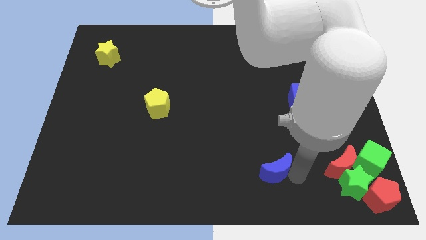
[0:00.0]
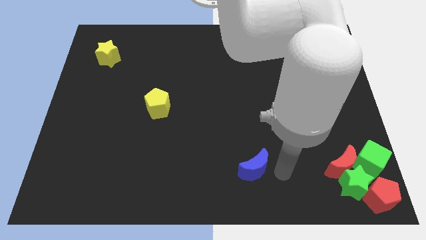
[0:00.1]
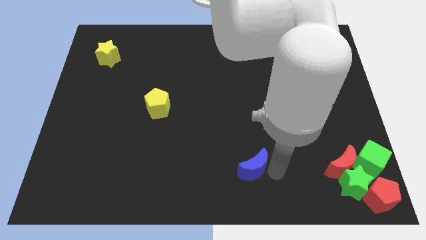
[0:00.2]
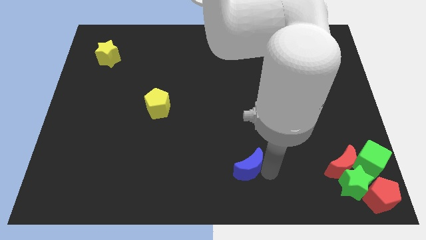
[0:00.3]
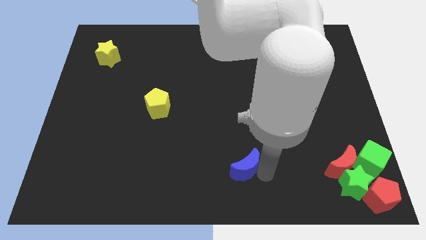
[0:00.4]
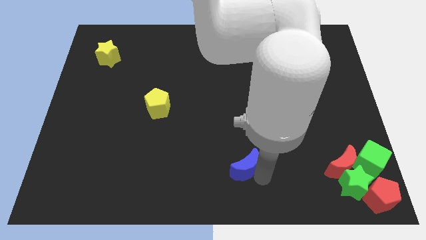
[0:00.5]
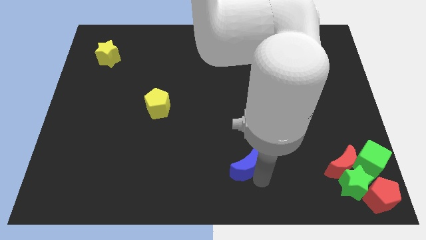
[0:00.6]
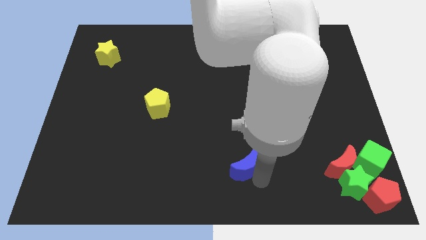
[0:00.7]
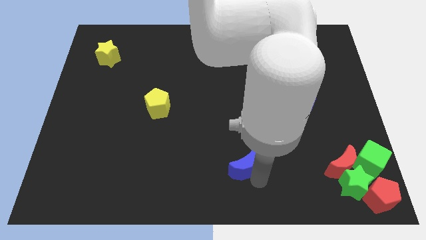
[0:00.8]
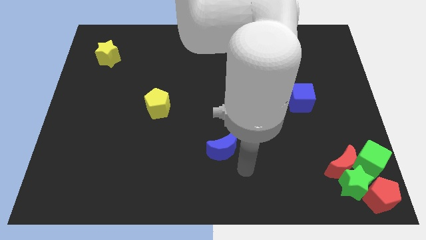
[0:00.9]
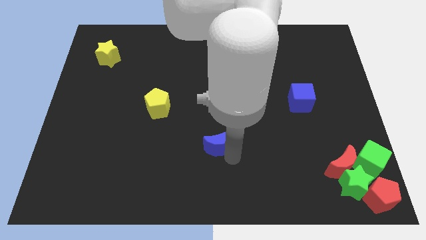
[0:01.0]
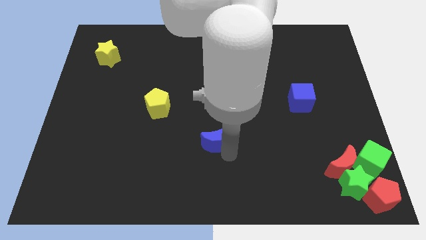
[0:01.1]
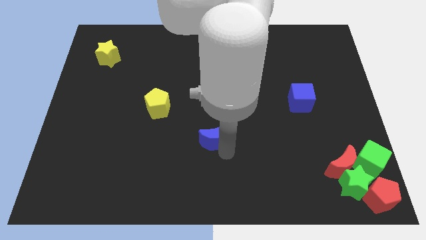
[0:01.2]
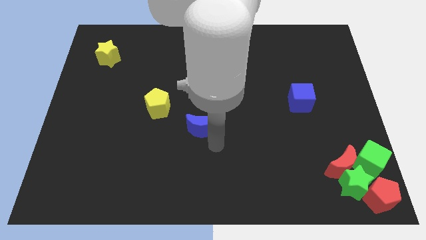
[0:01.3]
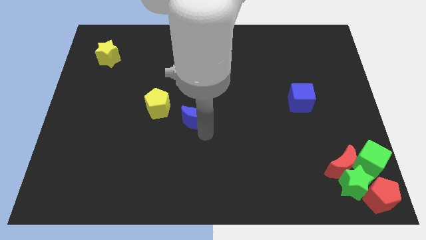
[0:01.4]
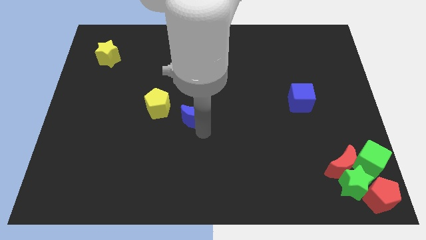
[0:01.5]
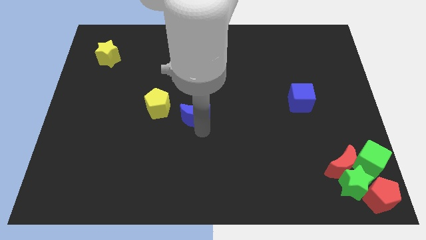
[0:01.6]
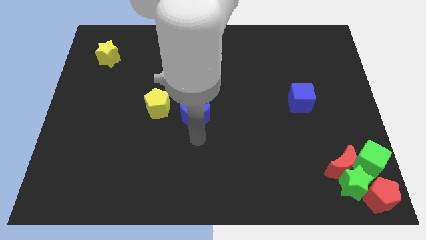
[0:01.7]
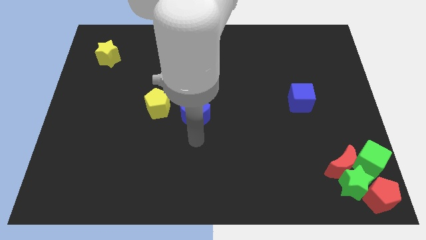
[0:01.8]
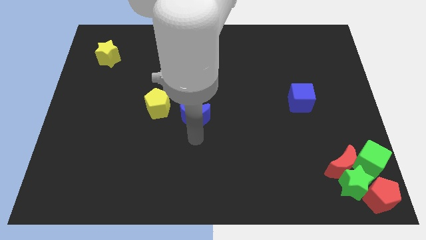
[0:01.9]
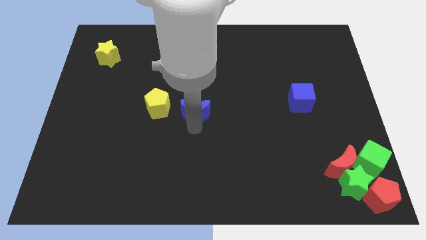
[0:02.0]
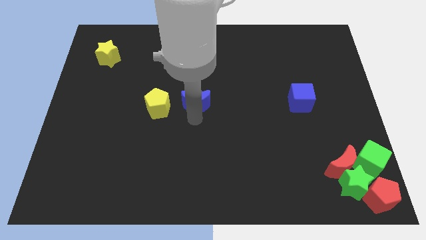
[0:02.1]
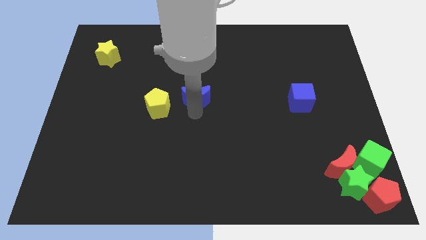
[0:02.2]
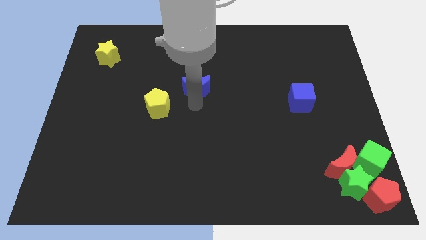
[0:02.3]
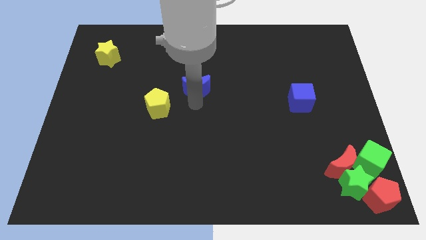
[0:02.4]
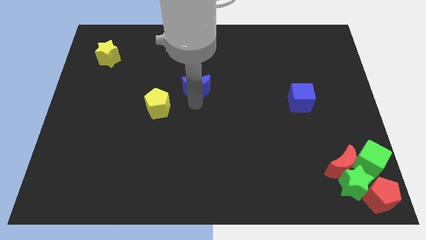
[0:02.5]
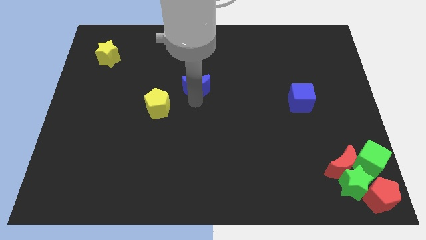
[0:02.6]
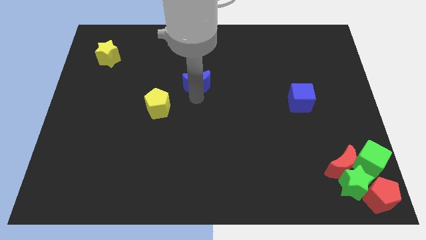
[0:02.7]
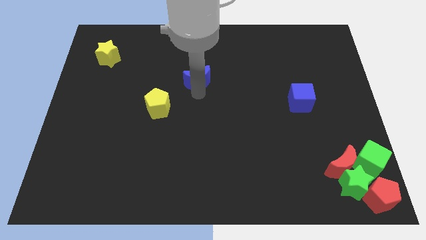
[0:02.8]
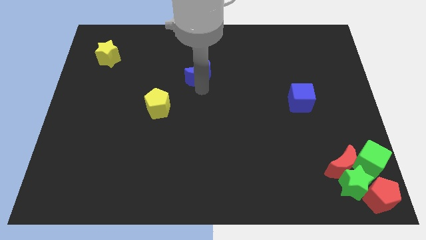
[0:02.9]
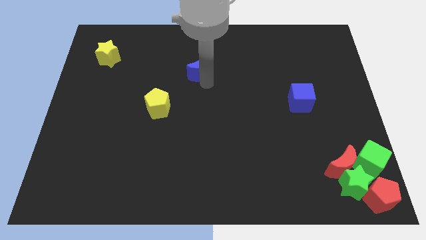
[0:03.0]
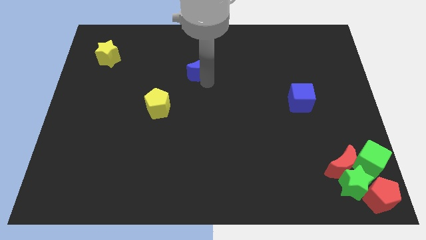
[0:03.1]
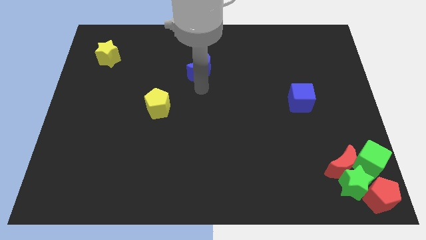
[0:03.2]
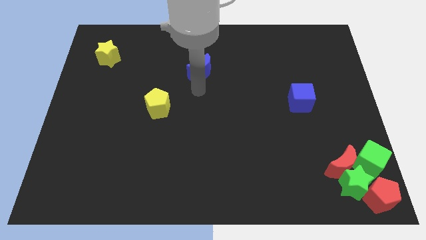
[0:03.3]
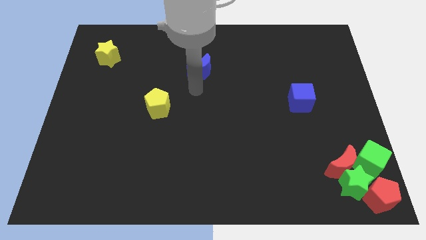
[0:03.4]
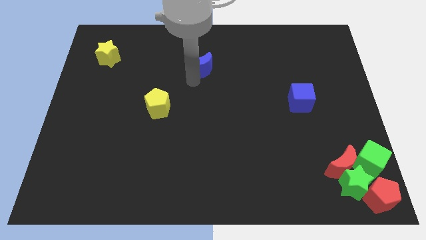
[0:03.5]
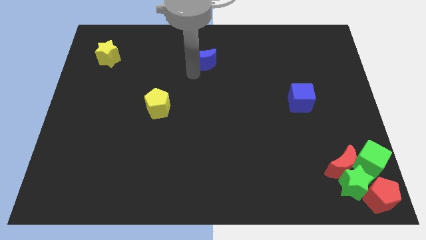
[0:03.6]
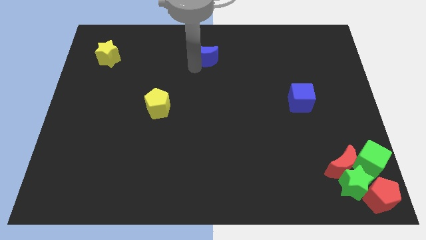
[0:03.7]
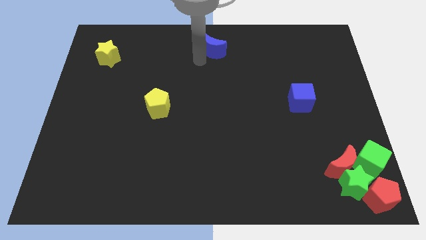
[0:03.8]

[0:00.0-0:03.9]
move the blue crescent parallel to yellow star

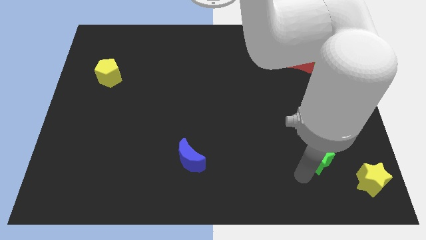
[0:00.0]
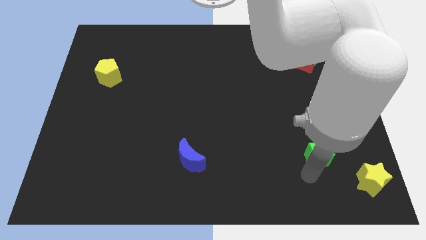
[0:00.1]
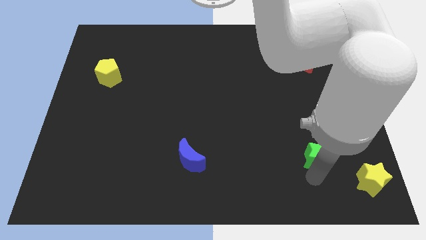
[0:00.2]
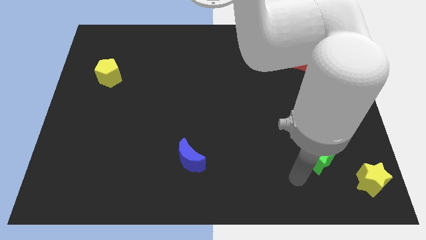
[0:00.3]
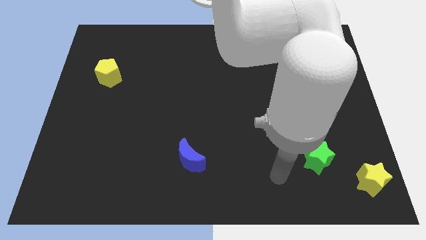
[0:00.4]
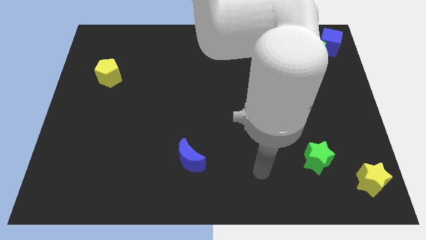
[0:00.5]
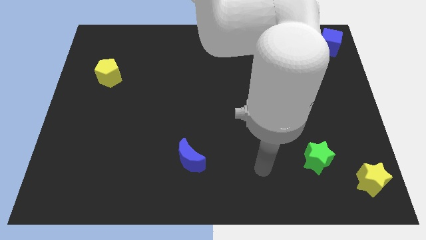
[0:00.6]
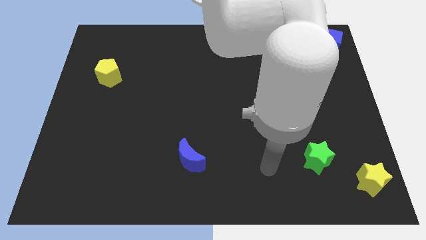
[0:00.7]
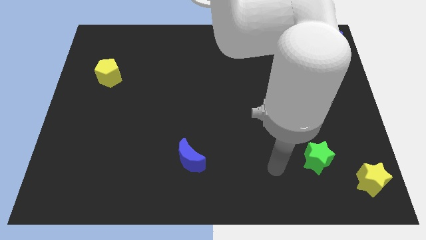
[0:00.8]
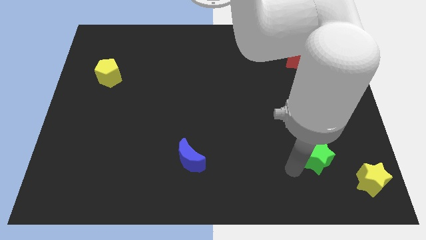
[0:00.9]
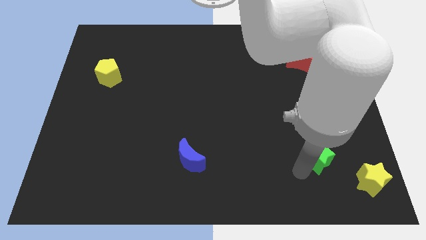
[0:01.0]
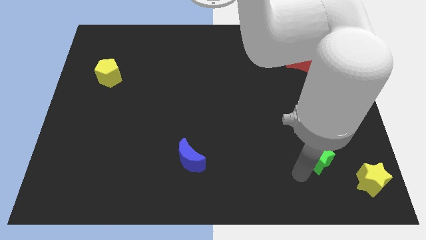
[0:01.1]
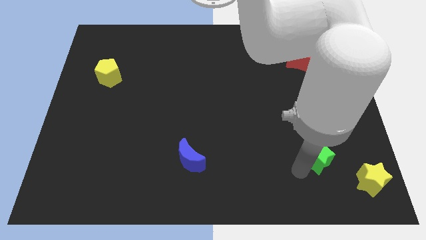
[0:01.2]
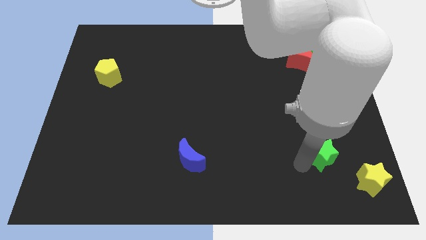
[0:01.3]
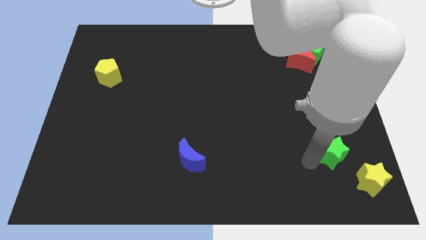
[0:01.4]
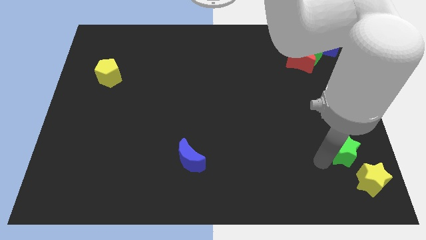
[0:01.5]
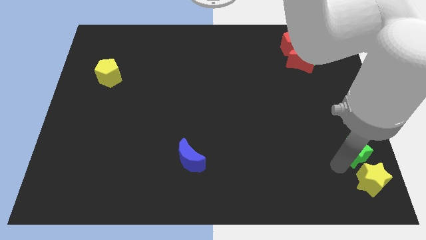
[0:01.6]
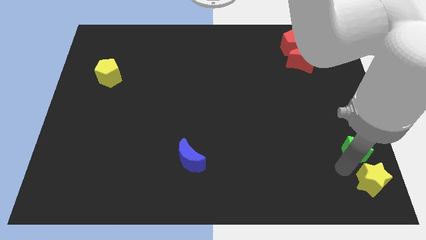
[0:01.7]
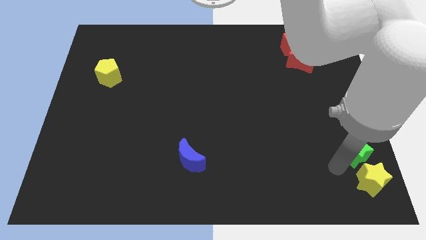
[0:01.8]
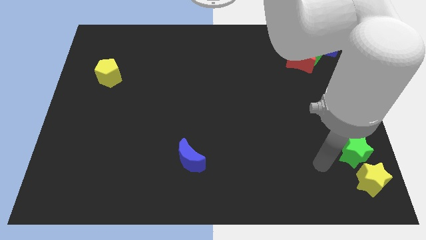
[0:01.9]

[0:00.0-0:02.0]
move the green star towards the top of the yellow star

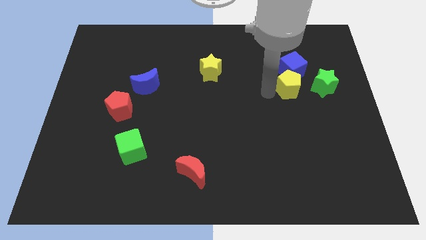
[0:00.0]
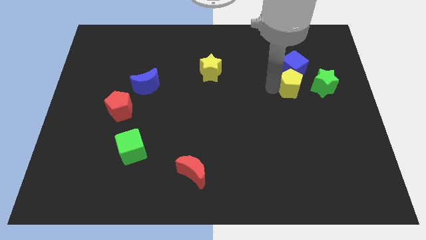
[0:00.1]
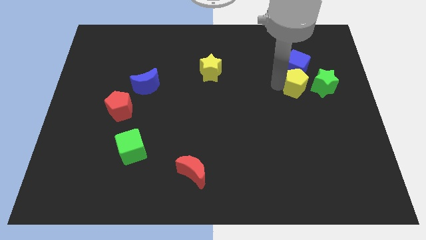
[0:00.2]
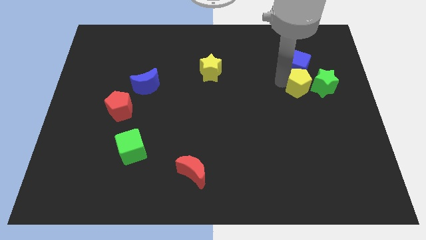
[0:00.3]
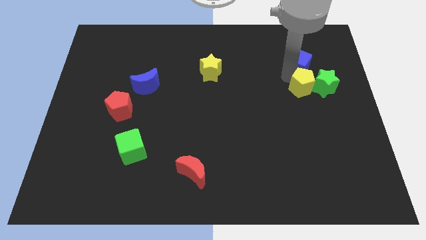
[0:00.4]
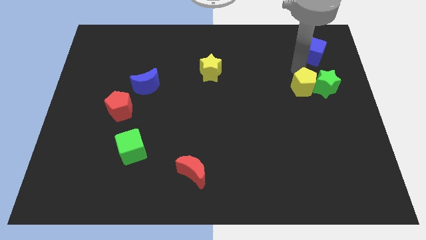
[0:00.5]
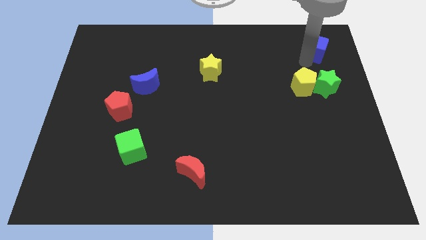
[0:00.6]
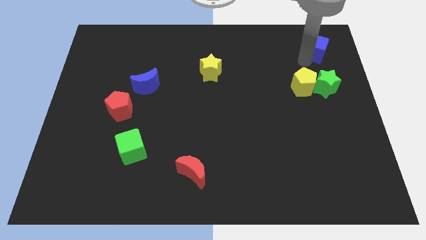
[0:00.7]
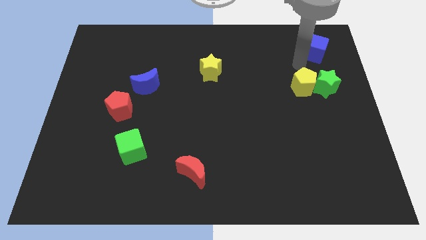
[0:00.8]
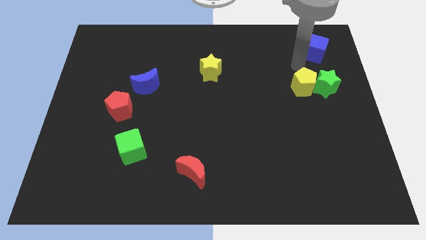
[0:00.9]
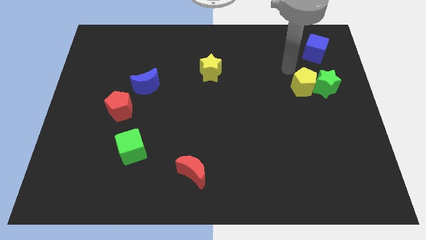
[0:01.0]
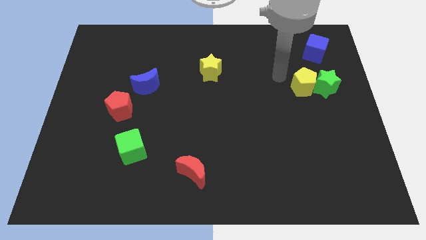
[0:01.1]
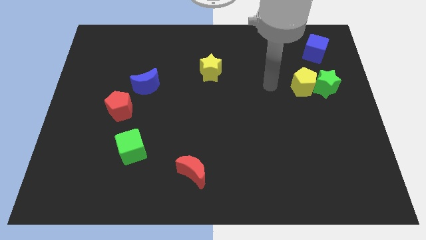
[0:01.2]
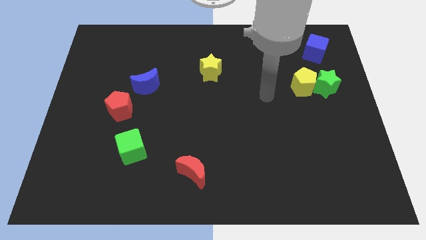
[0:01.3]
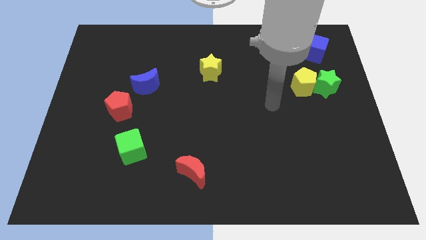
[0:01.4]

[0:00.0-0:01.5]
separate the blue cube from the yellow pentagon

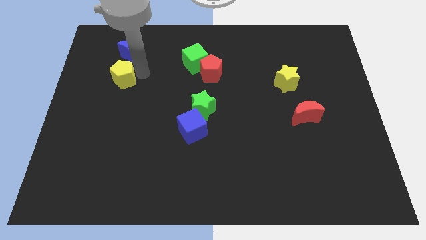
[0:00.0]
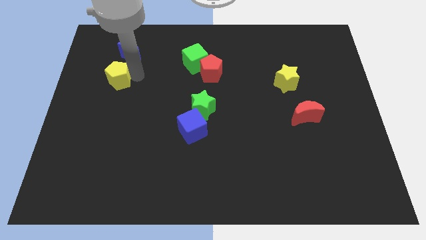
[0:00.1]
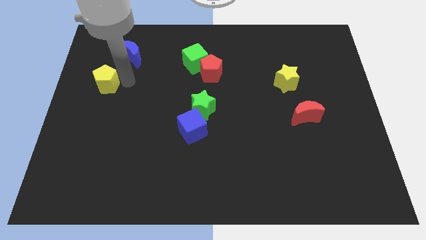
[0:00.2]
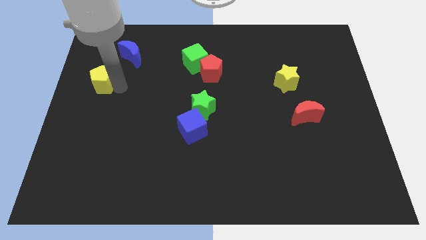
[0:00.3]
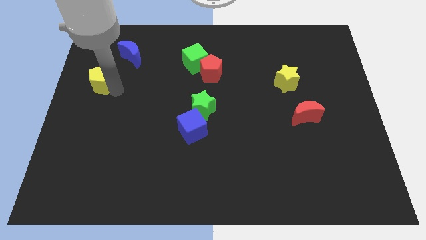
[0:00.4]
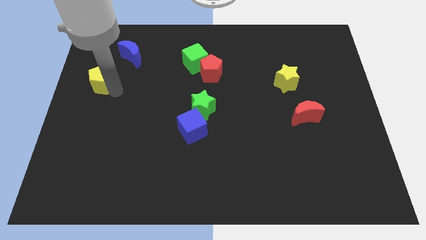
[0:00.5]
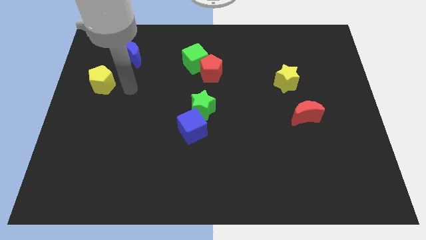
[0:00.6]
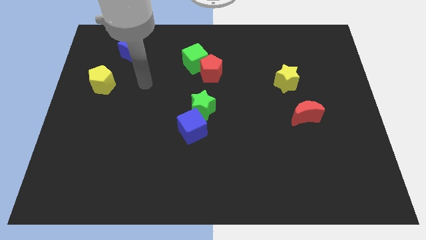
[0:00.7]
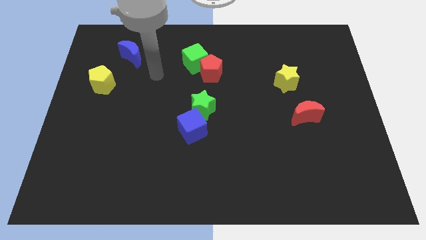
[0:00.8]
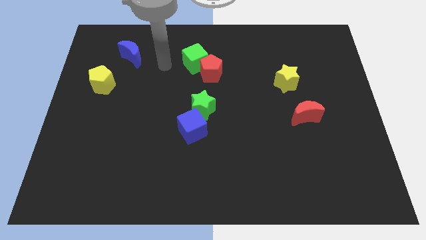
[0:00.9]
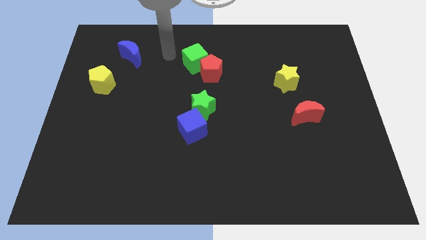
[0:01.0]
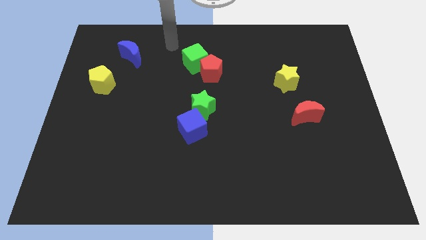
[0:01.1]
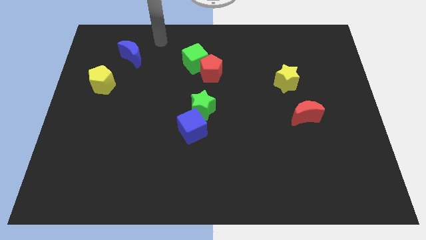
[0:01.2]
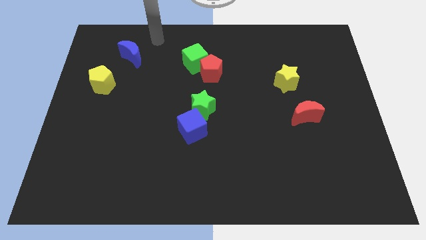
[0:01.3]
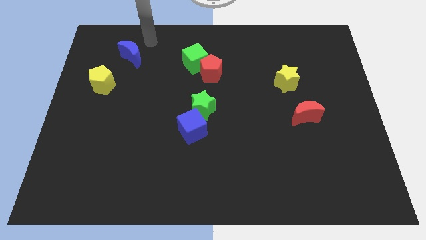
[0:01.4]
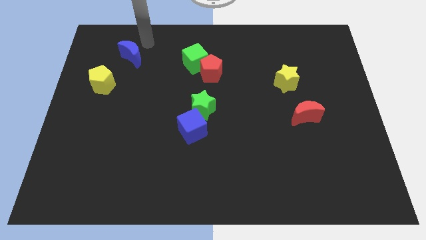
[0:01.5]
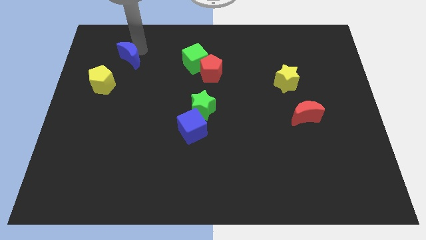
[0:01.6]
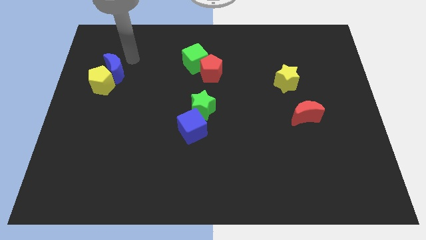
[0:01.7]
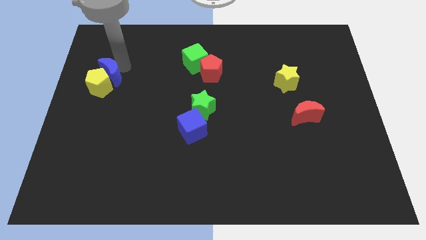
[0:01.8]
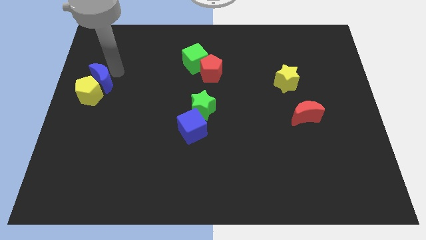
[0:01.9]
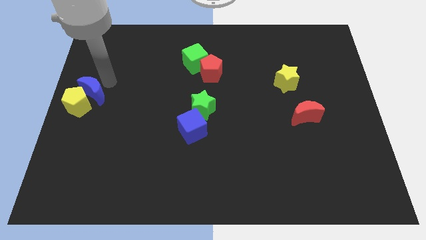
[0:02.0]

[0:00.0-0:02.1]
place the blue moon and the yellow pentagon at the left center of the board
